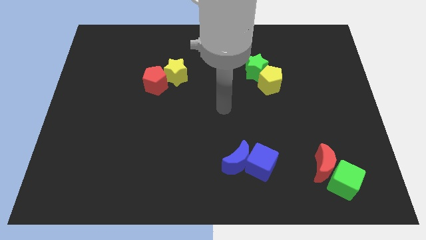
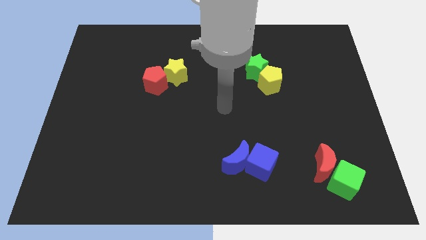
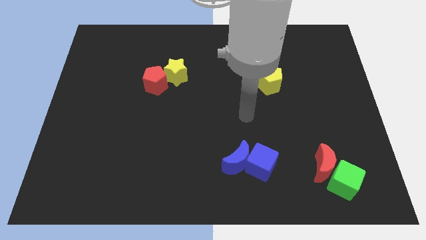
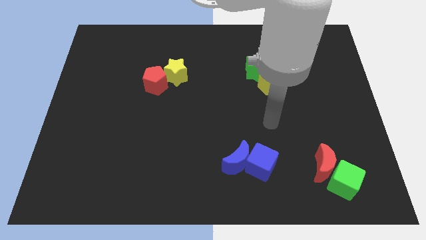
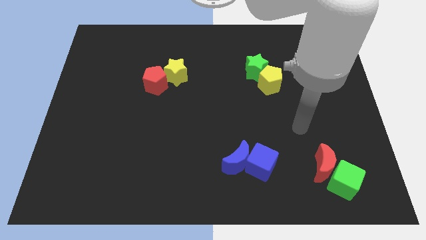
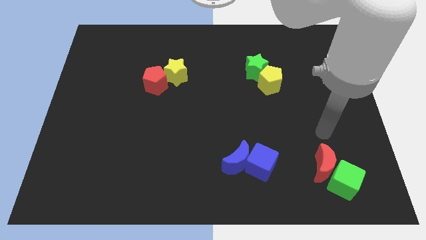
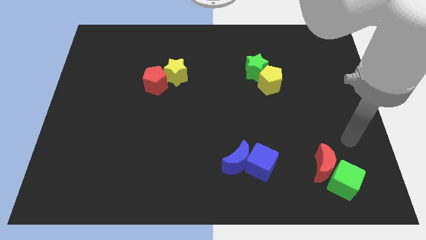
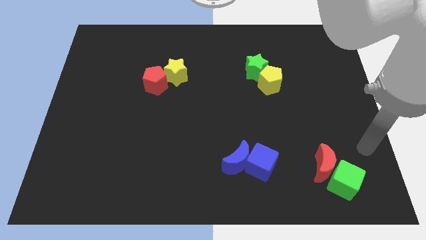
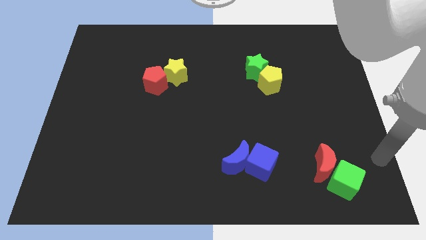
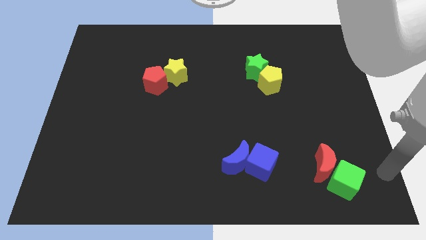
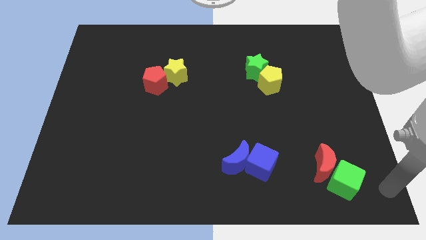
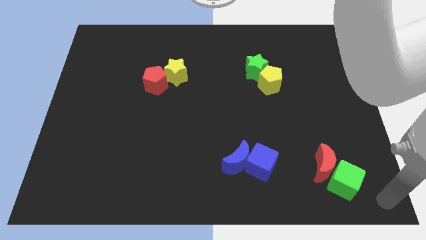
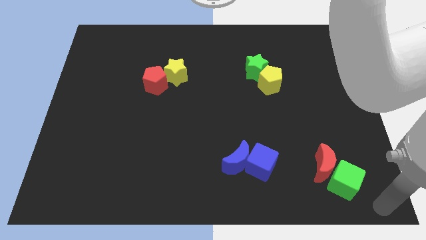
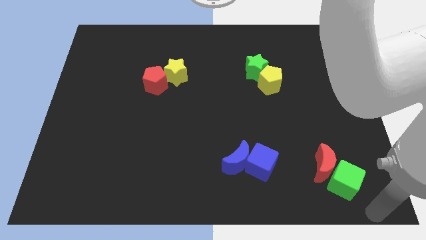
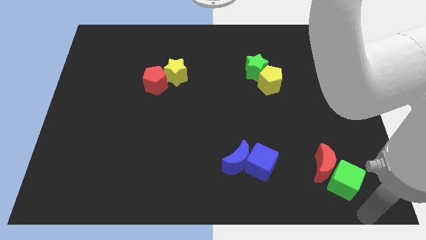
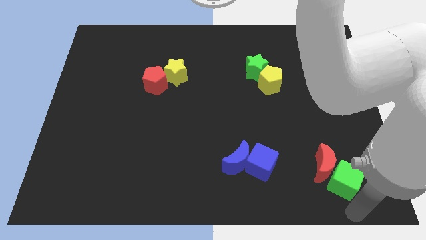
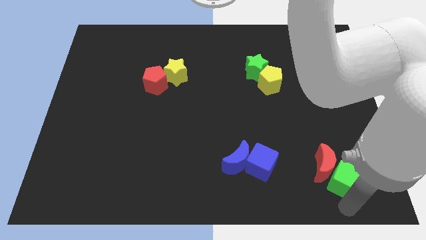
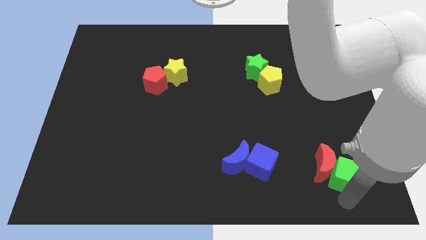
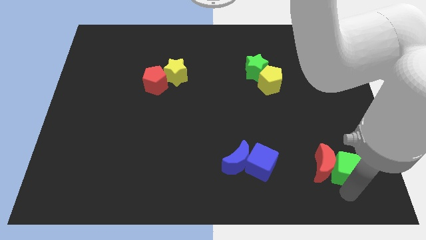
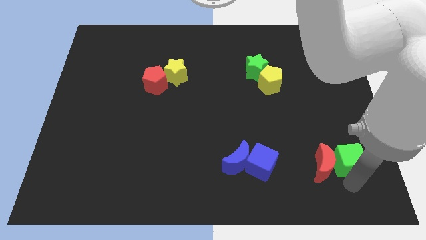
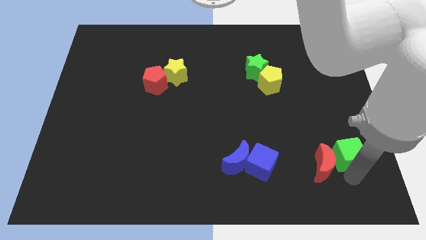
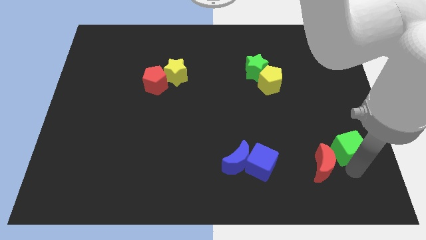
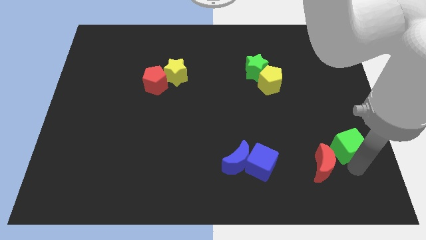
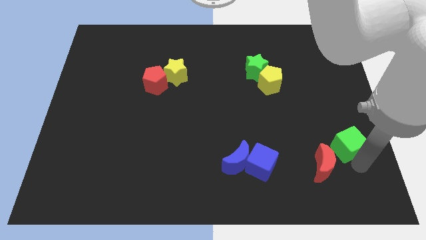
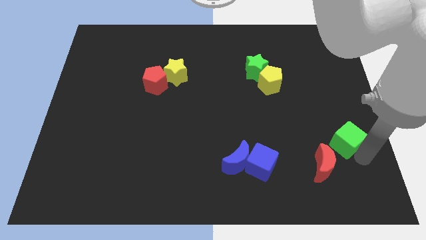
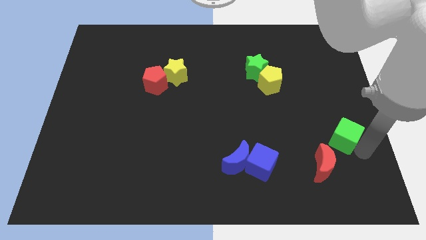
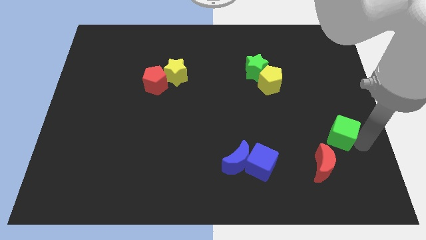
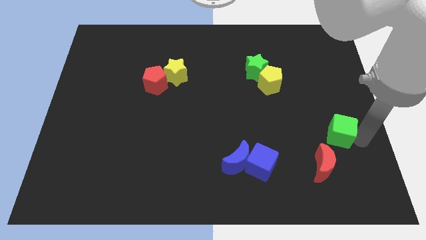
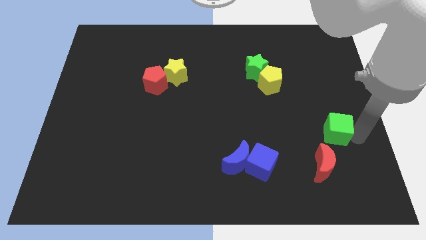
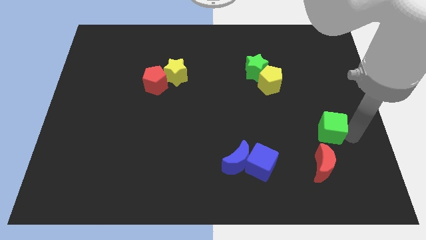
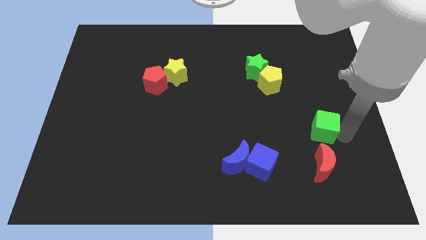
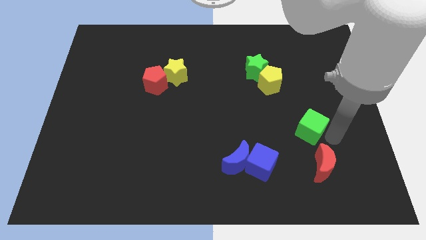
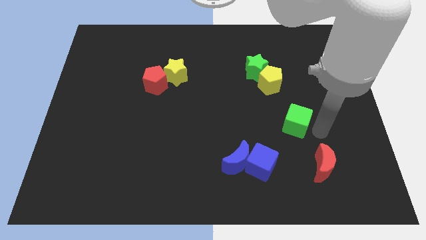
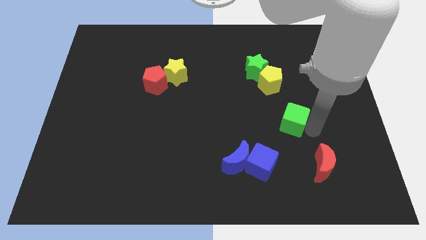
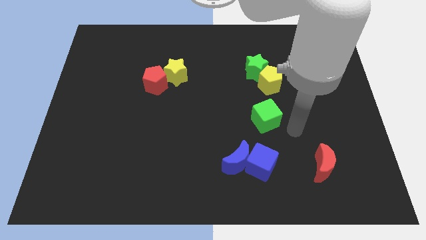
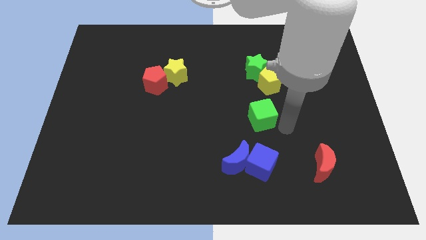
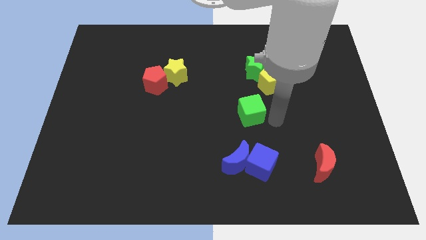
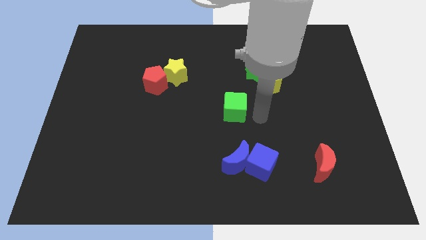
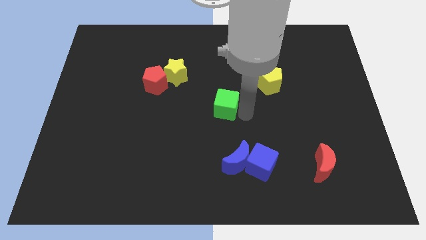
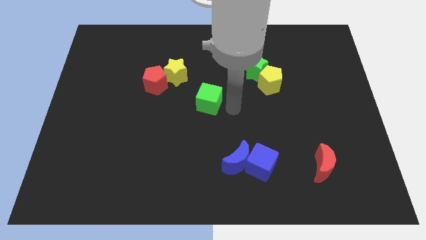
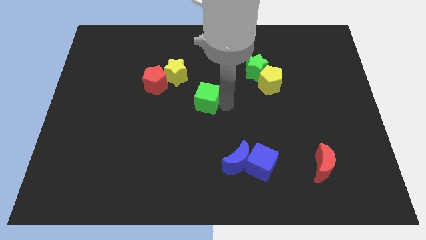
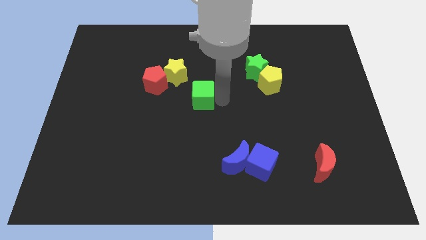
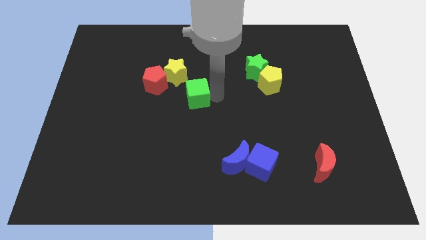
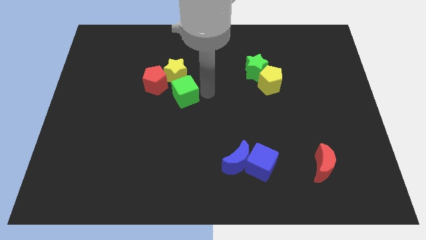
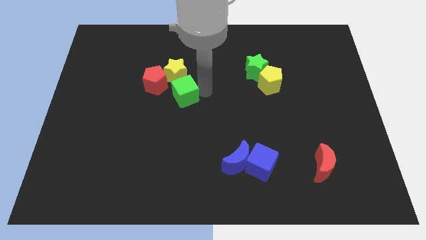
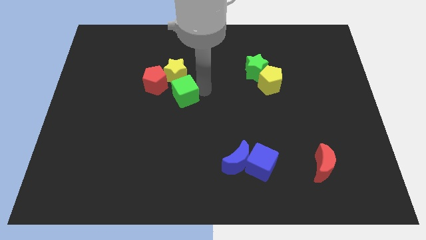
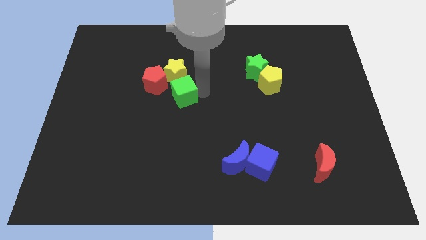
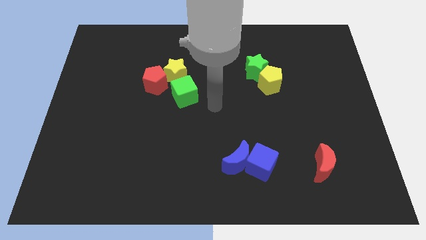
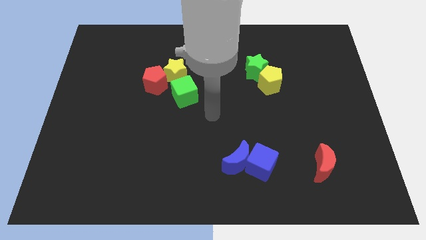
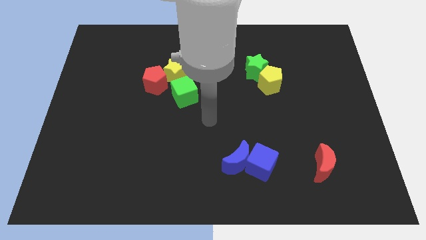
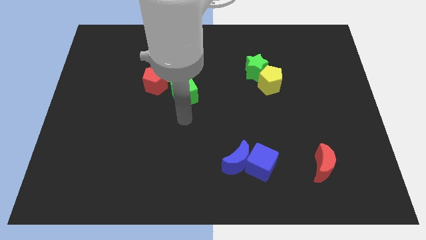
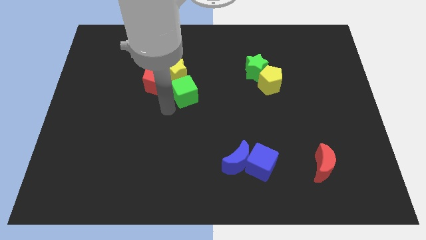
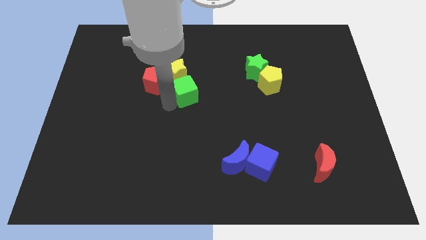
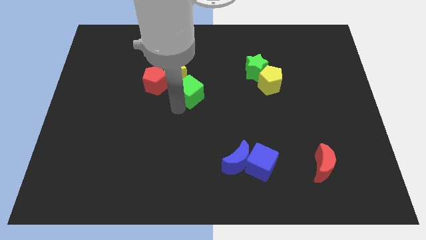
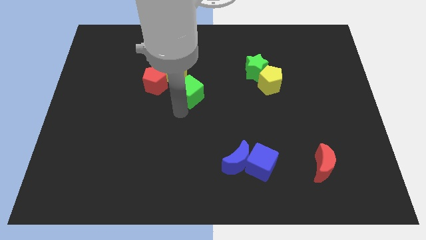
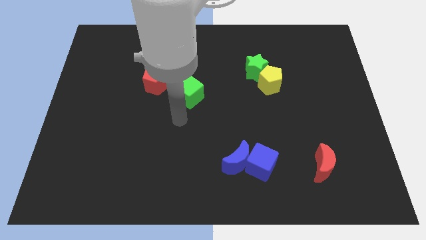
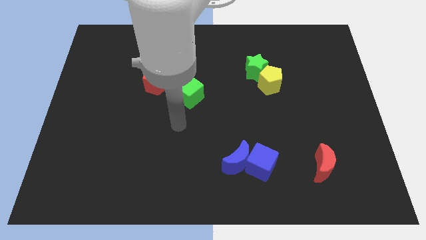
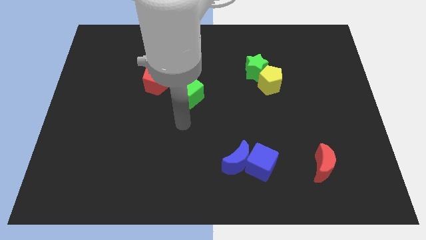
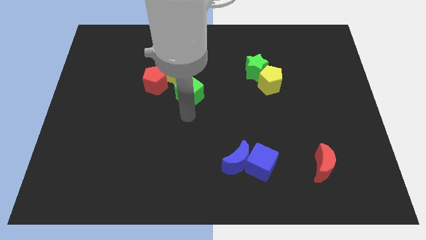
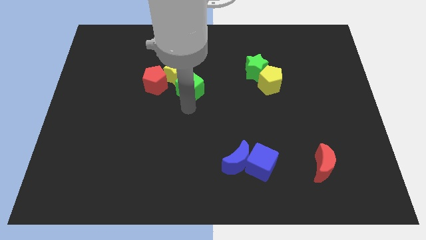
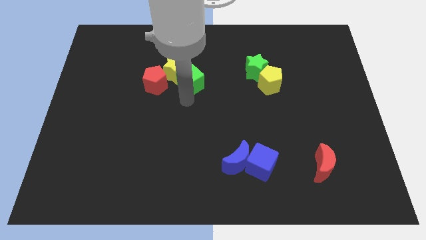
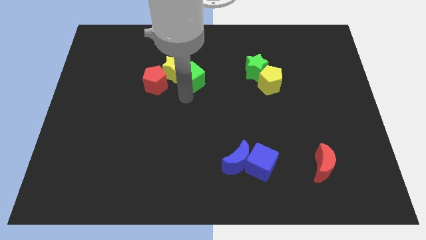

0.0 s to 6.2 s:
move the green cube close to the yellow star

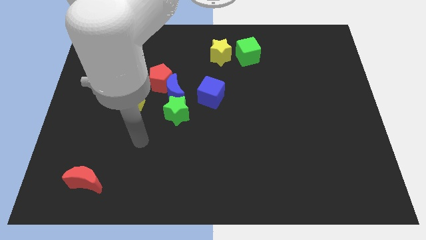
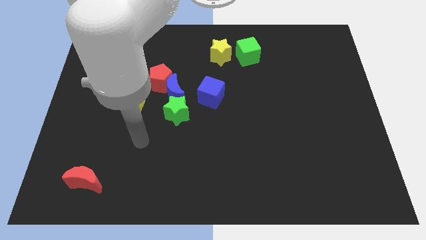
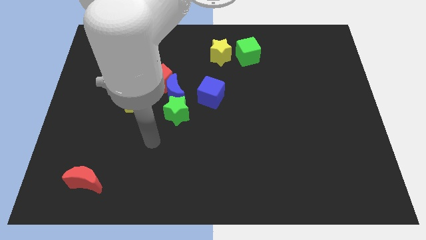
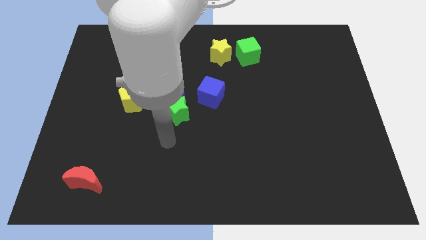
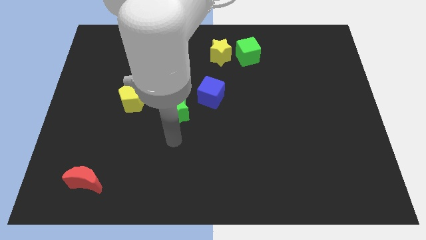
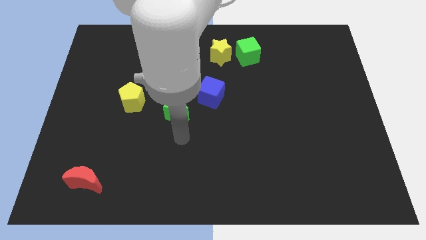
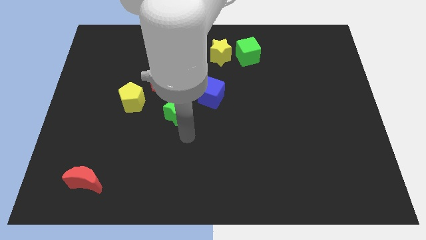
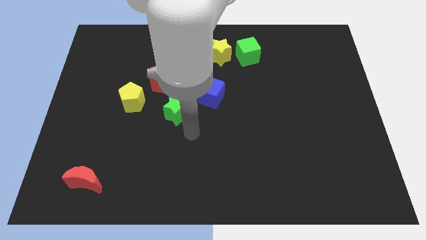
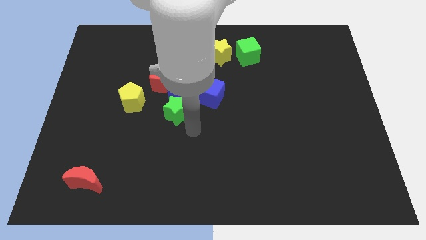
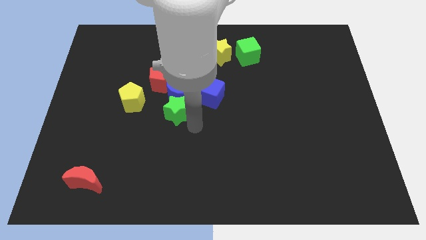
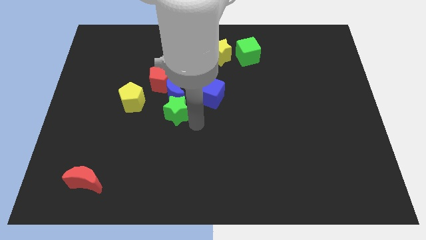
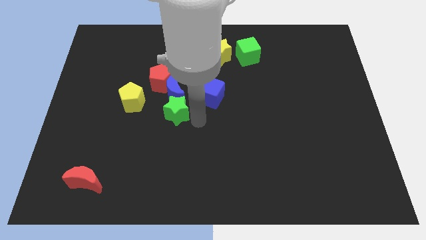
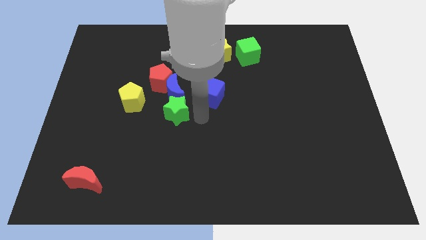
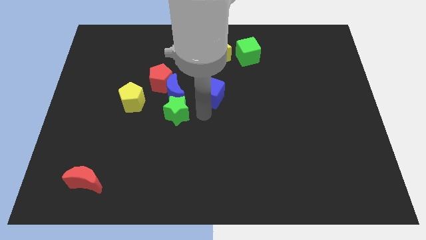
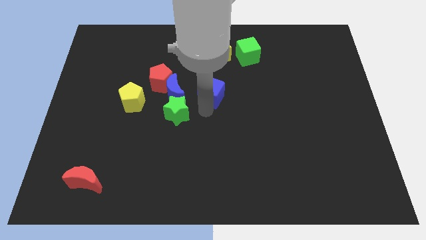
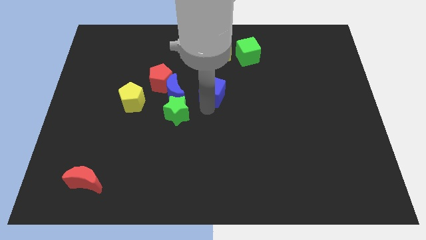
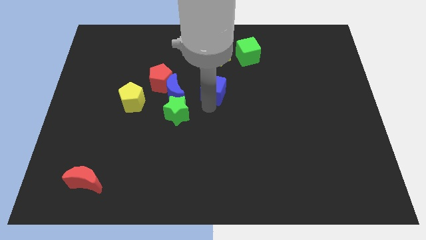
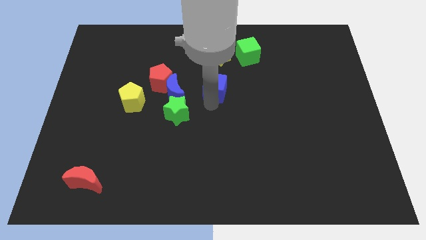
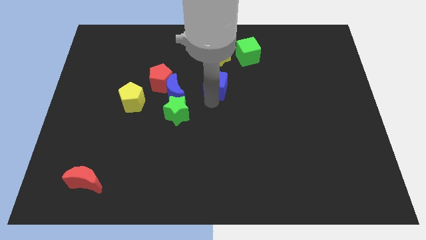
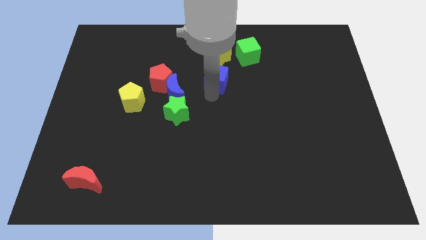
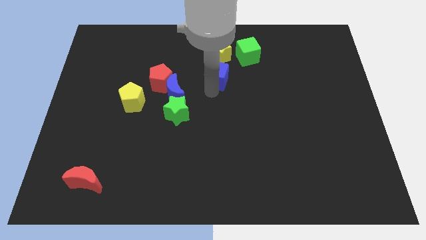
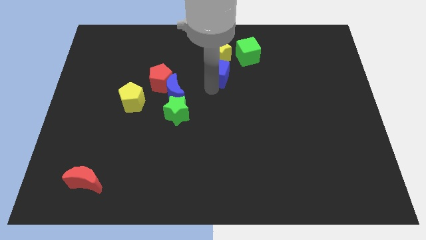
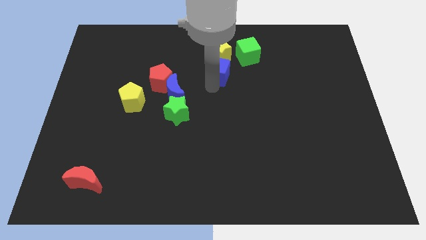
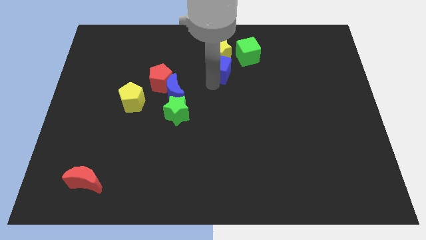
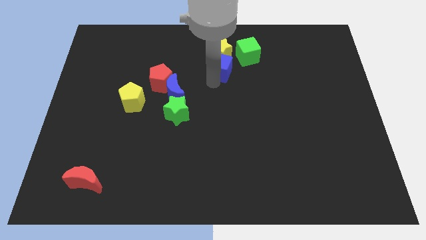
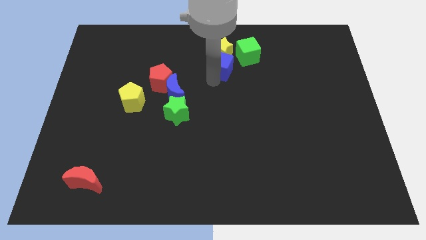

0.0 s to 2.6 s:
push the blue cube next to the yellow star
